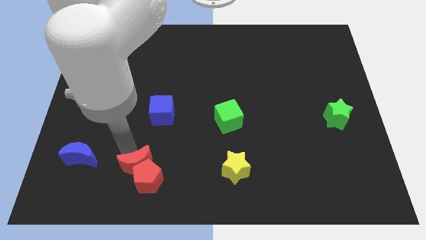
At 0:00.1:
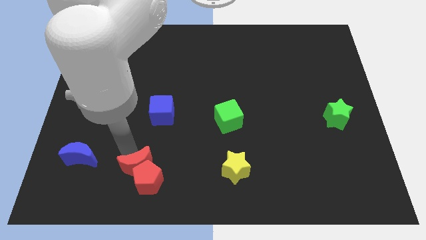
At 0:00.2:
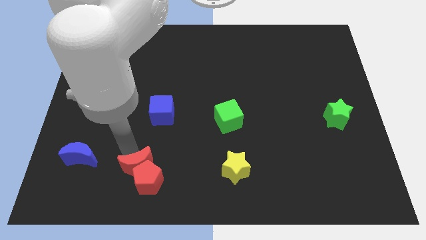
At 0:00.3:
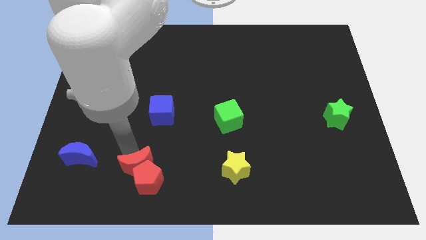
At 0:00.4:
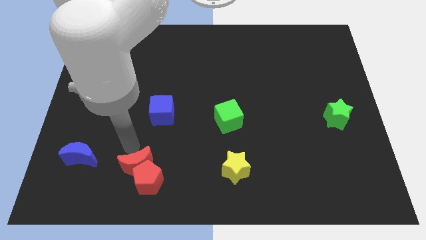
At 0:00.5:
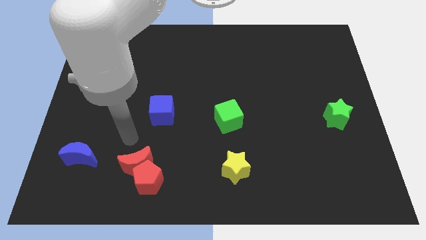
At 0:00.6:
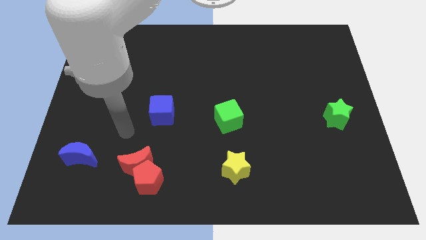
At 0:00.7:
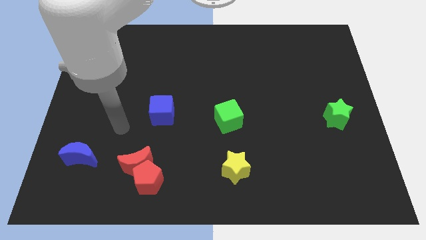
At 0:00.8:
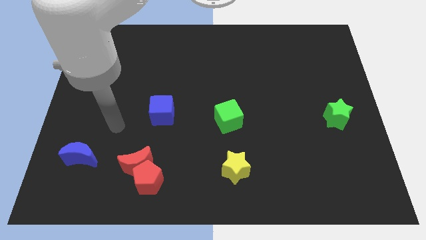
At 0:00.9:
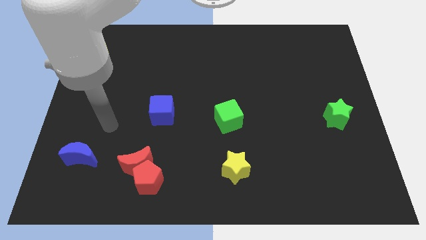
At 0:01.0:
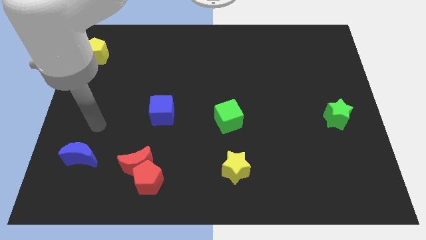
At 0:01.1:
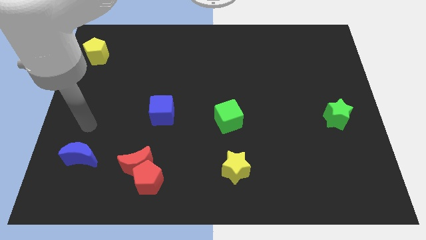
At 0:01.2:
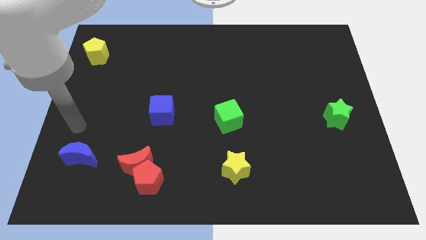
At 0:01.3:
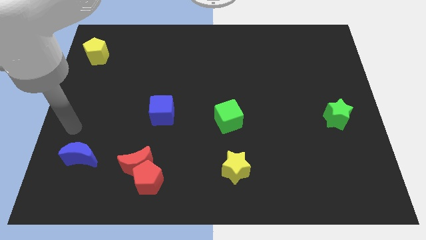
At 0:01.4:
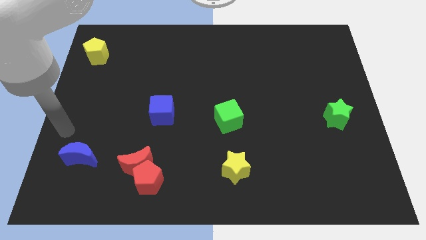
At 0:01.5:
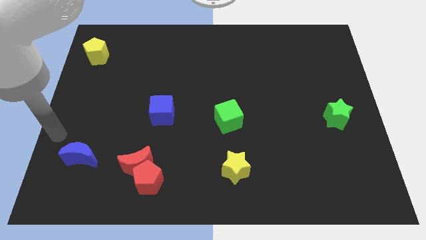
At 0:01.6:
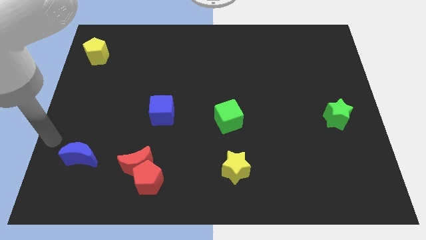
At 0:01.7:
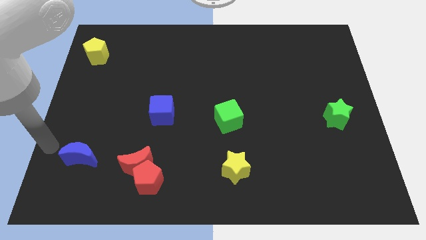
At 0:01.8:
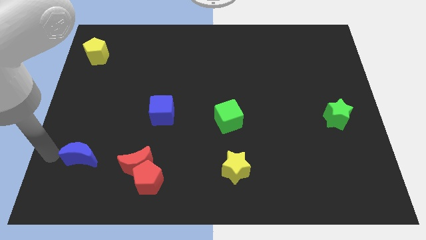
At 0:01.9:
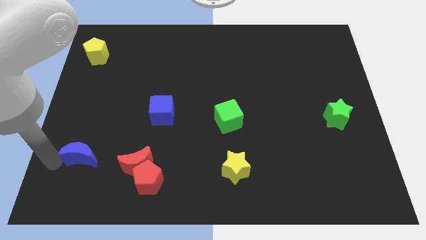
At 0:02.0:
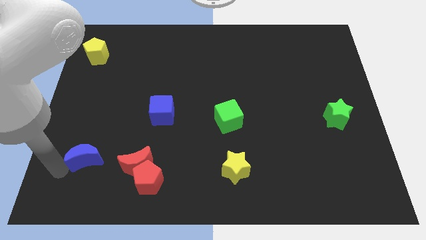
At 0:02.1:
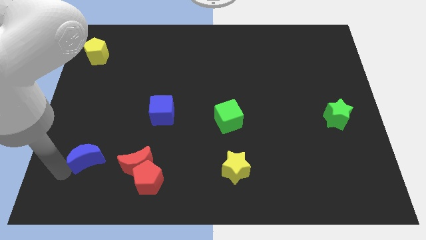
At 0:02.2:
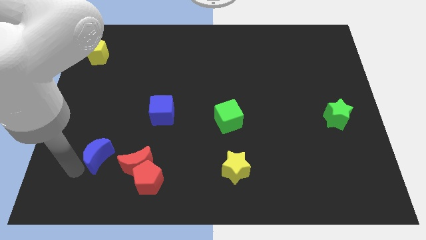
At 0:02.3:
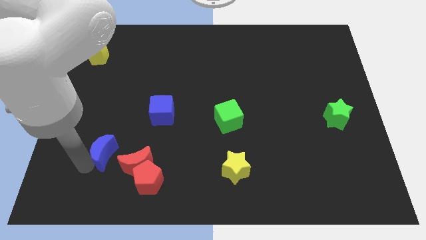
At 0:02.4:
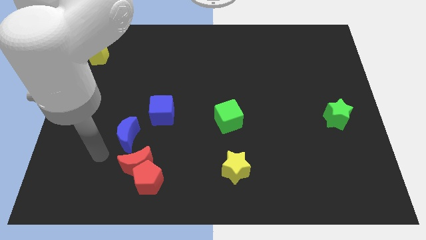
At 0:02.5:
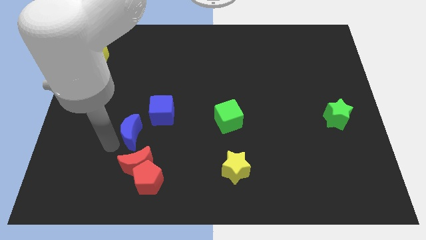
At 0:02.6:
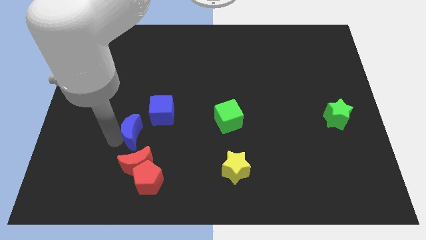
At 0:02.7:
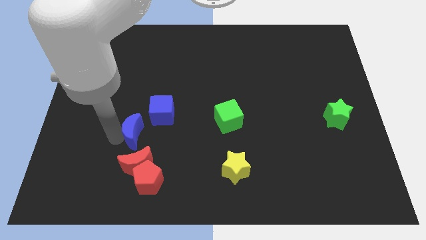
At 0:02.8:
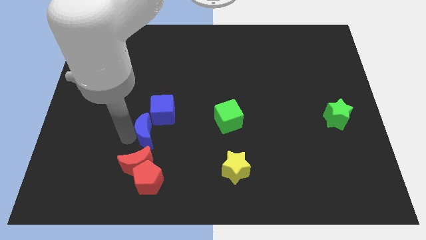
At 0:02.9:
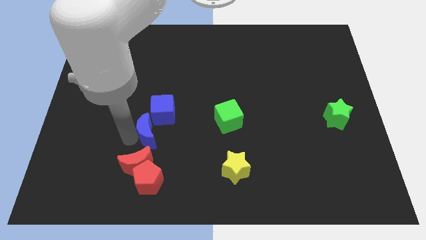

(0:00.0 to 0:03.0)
move the blue moon towards the blue cube

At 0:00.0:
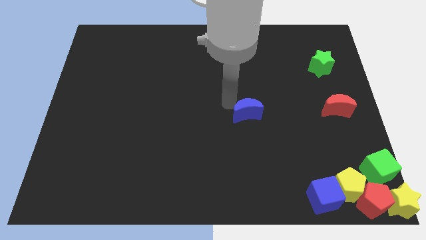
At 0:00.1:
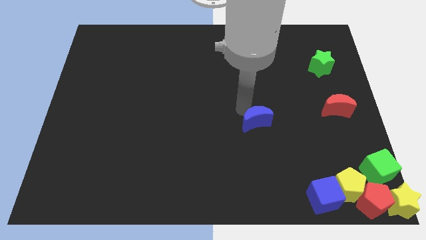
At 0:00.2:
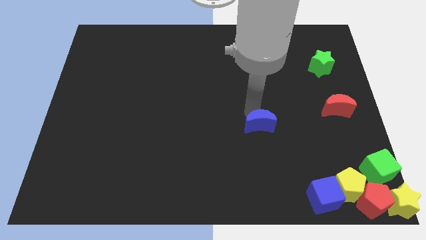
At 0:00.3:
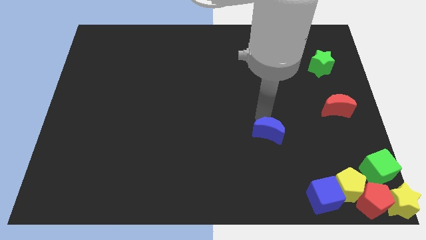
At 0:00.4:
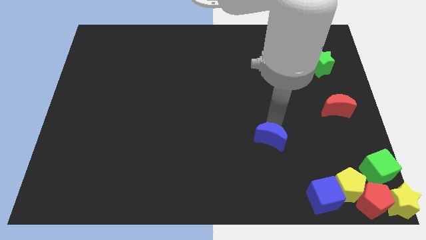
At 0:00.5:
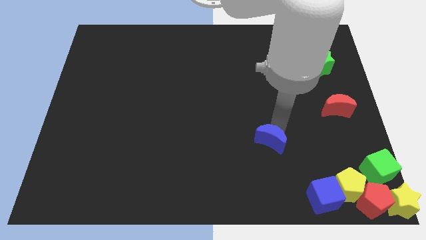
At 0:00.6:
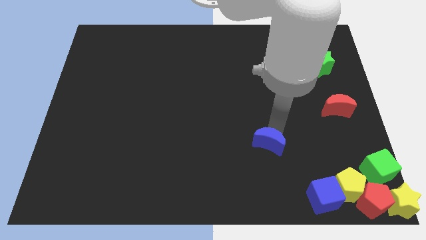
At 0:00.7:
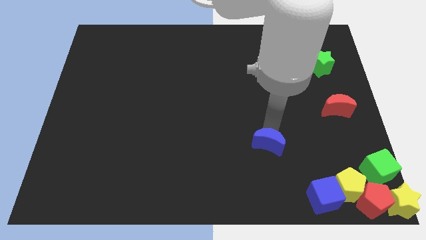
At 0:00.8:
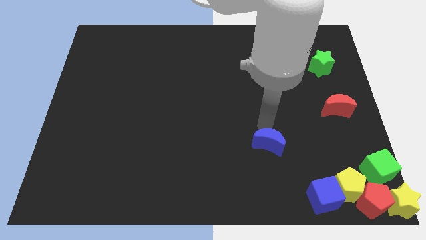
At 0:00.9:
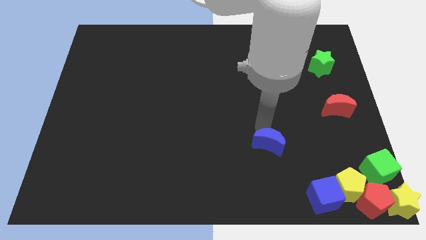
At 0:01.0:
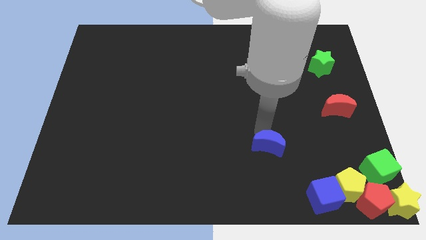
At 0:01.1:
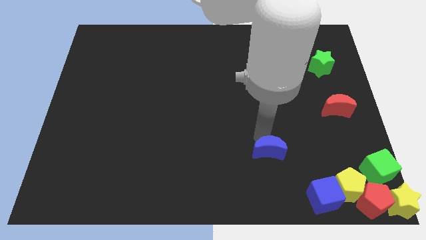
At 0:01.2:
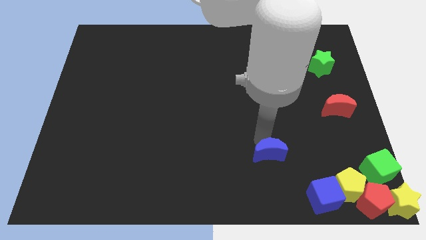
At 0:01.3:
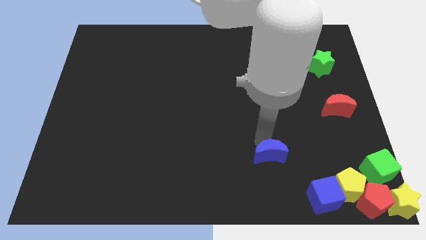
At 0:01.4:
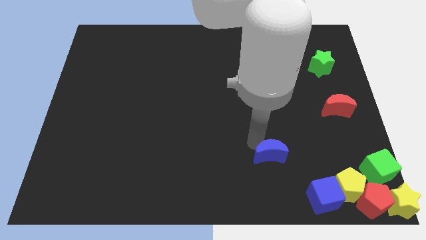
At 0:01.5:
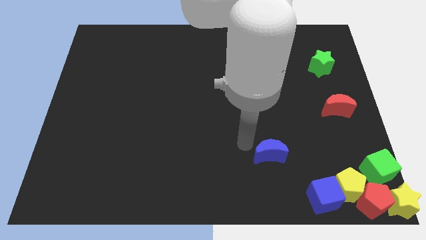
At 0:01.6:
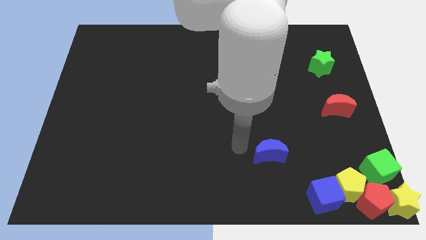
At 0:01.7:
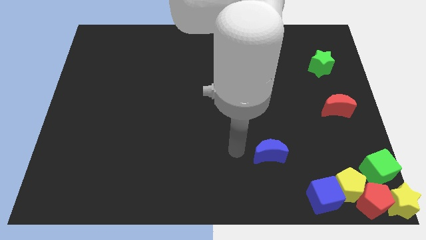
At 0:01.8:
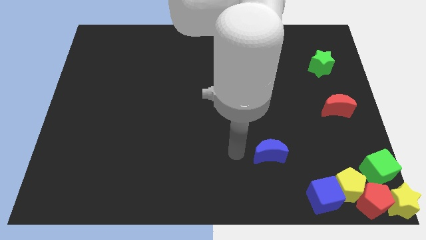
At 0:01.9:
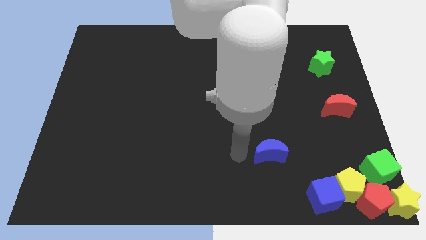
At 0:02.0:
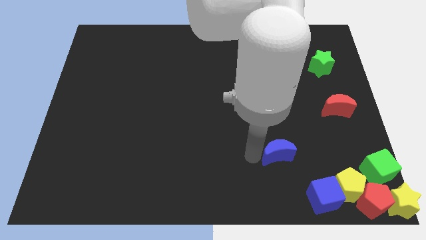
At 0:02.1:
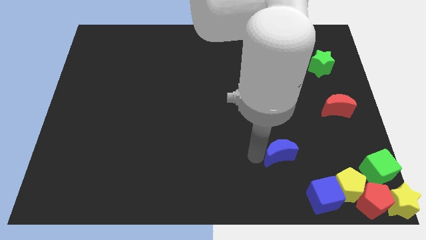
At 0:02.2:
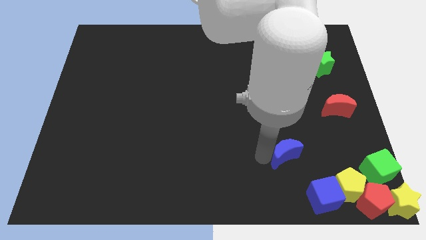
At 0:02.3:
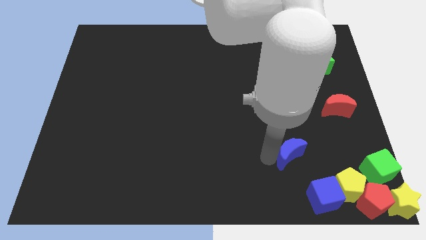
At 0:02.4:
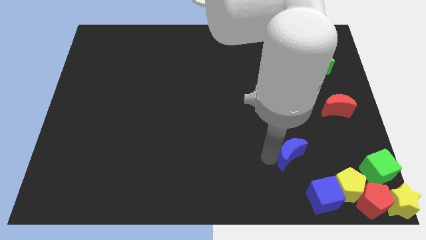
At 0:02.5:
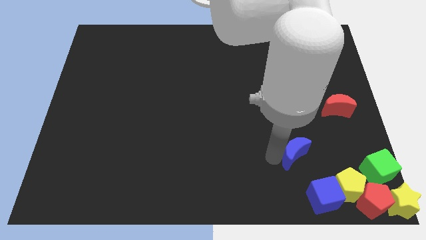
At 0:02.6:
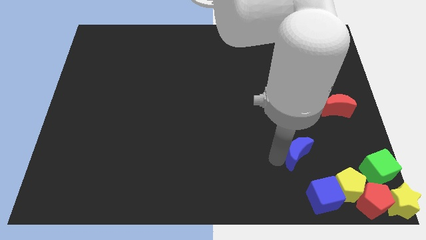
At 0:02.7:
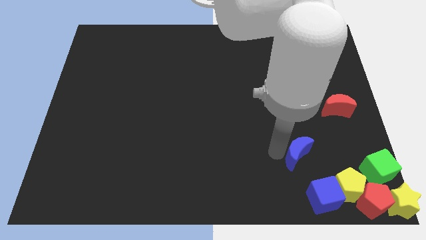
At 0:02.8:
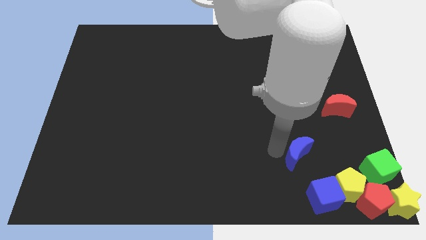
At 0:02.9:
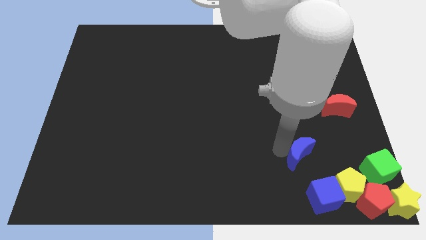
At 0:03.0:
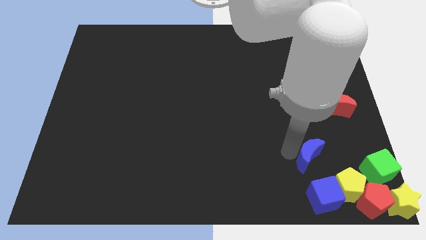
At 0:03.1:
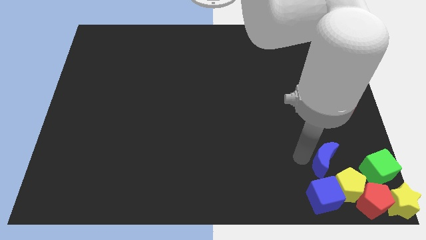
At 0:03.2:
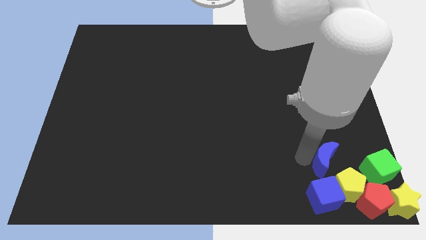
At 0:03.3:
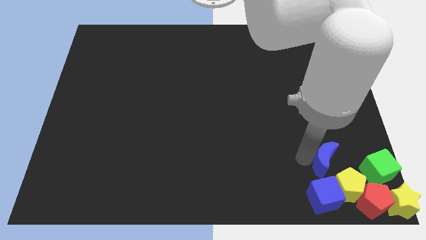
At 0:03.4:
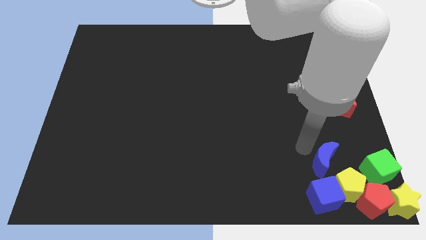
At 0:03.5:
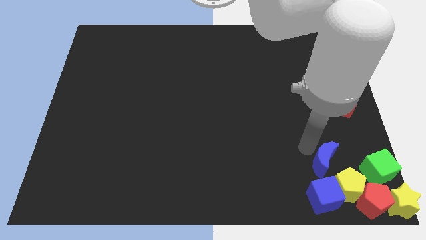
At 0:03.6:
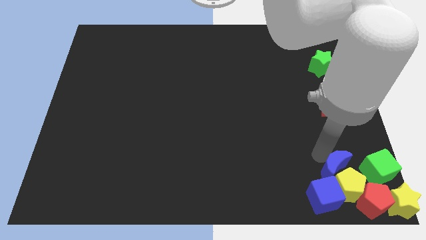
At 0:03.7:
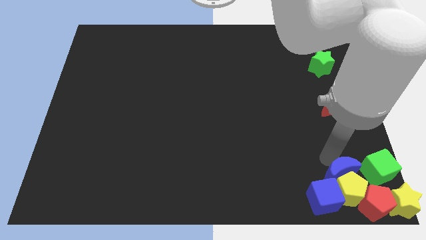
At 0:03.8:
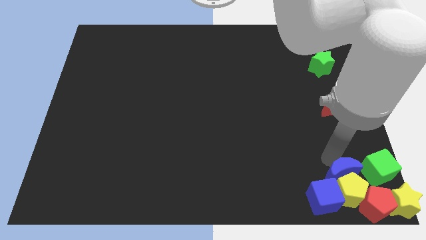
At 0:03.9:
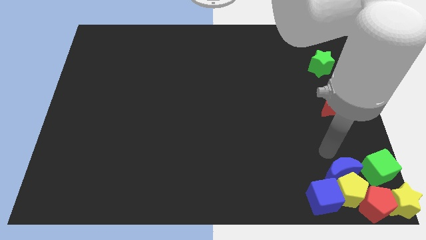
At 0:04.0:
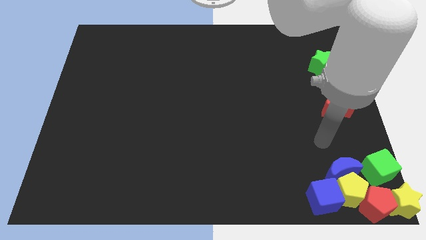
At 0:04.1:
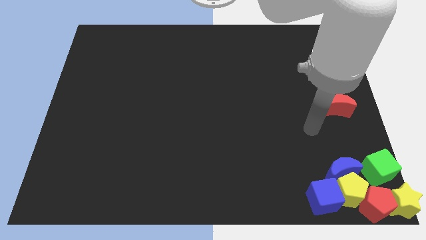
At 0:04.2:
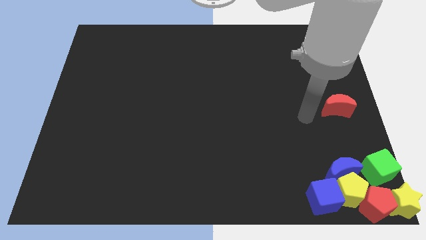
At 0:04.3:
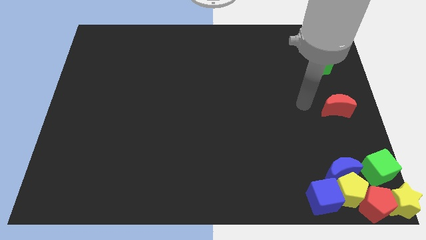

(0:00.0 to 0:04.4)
slide the blue crescent above to the yellow pentagon

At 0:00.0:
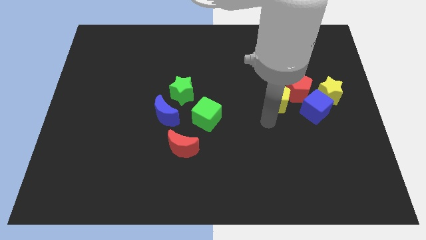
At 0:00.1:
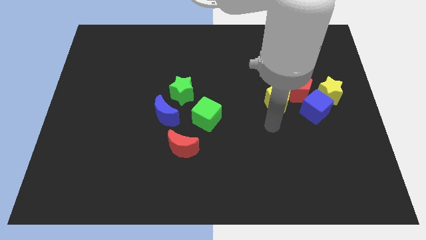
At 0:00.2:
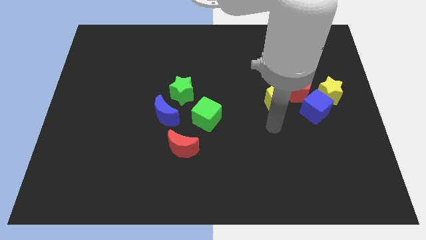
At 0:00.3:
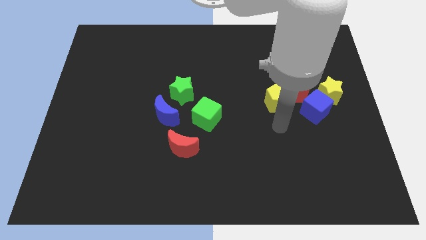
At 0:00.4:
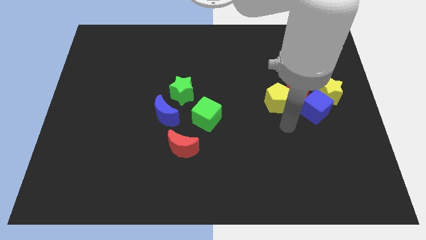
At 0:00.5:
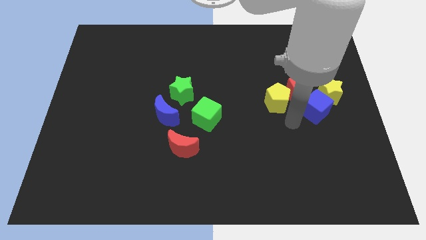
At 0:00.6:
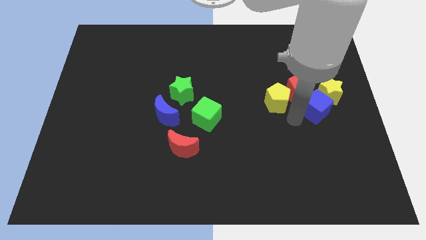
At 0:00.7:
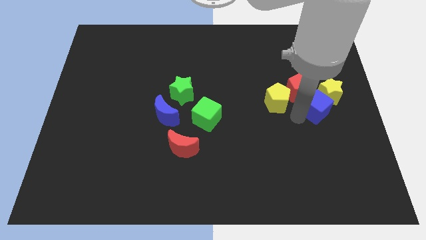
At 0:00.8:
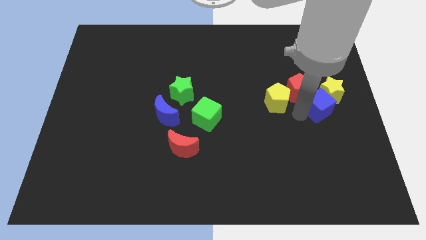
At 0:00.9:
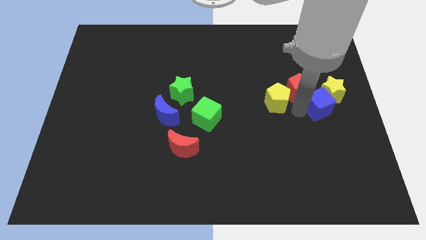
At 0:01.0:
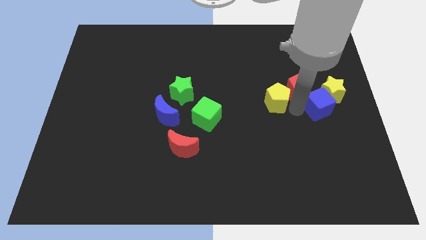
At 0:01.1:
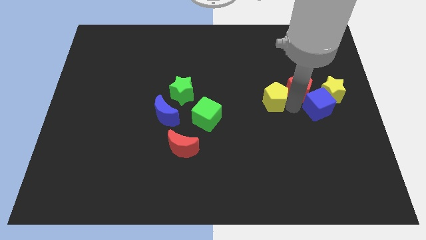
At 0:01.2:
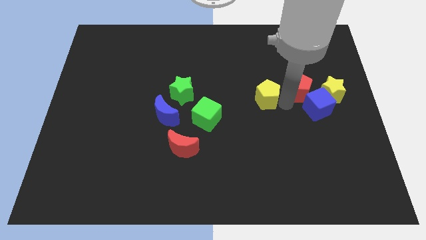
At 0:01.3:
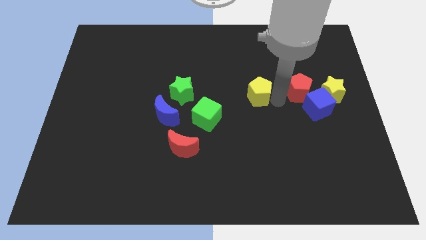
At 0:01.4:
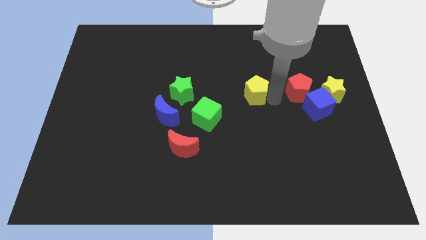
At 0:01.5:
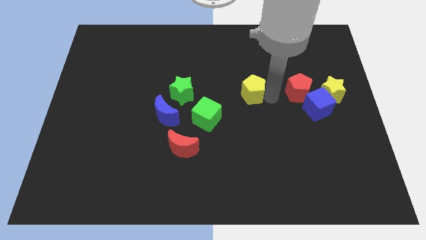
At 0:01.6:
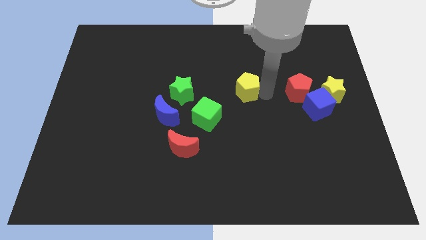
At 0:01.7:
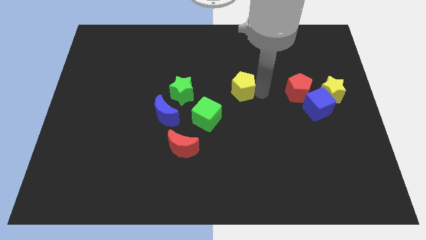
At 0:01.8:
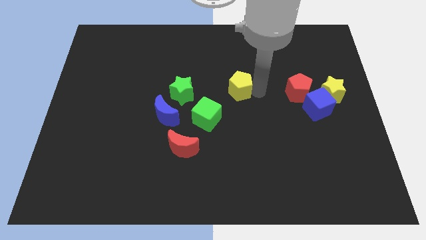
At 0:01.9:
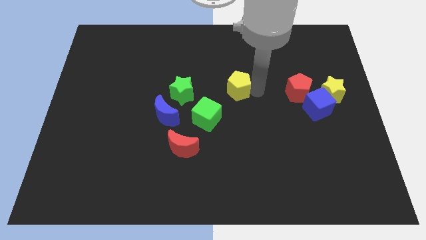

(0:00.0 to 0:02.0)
push the yellow pentagon to the top right side of the green cube
